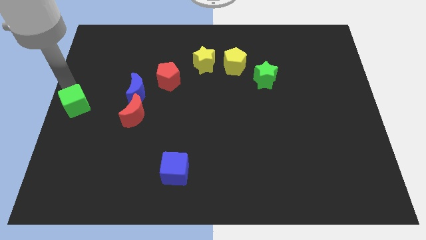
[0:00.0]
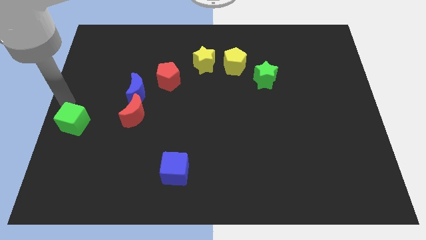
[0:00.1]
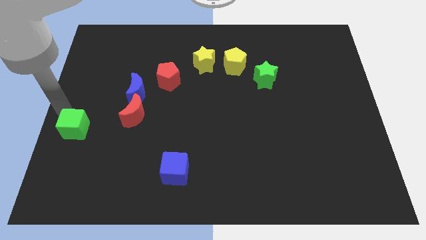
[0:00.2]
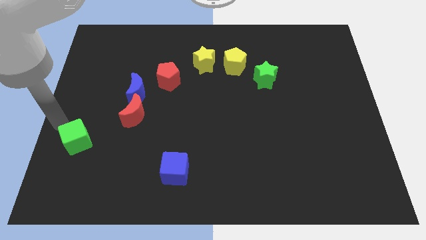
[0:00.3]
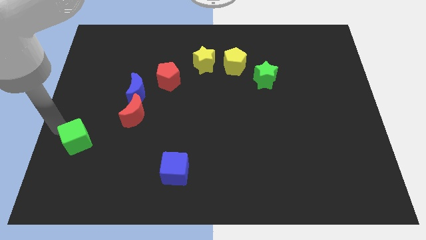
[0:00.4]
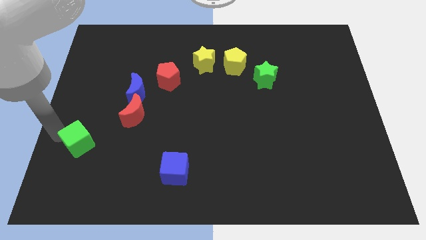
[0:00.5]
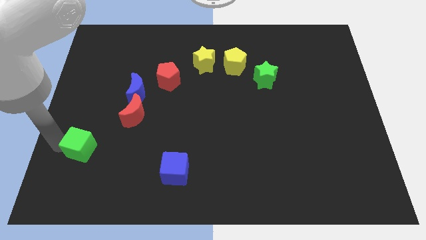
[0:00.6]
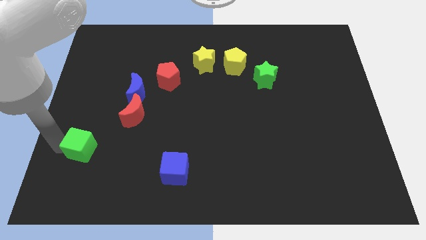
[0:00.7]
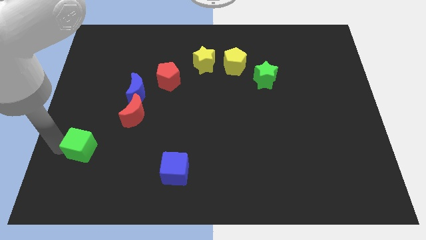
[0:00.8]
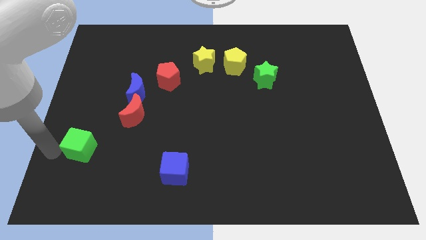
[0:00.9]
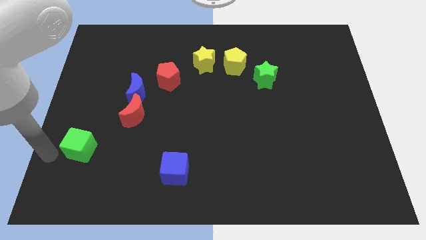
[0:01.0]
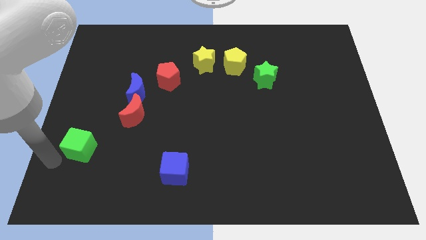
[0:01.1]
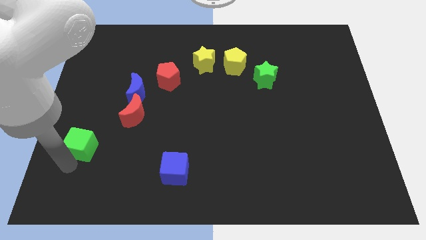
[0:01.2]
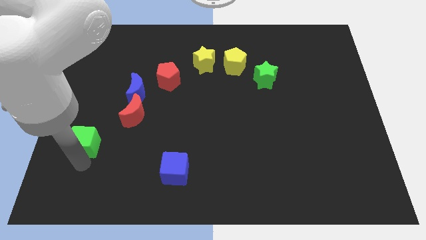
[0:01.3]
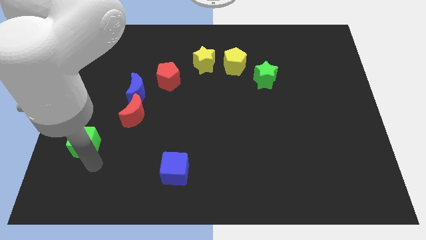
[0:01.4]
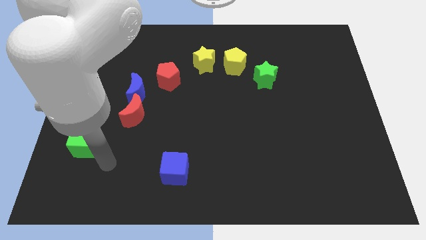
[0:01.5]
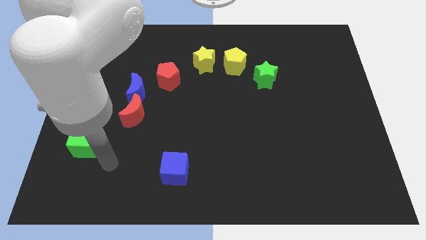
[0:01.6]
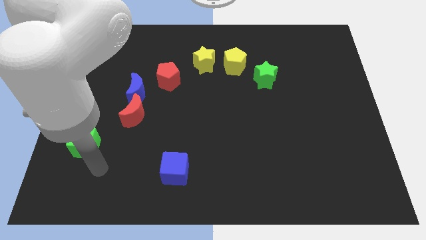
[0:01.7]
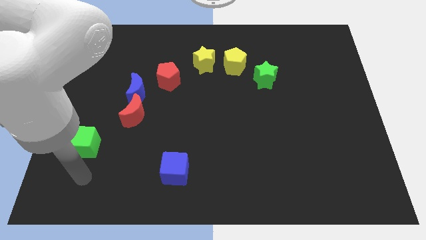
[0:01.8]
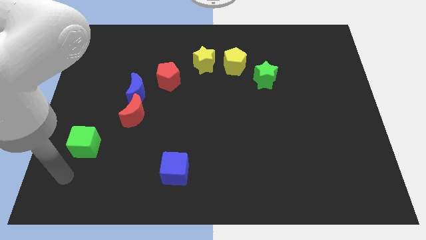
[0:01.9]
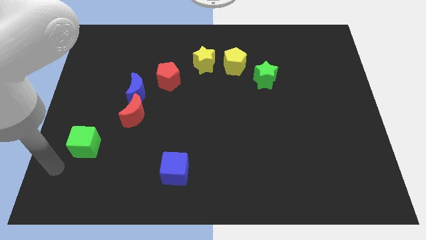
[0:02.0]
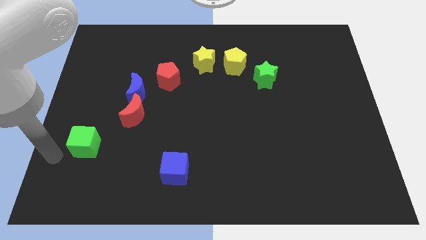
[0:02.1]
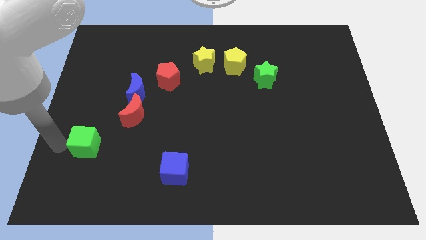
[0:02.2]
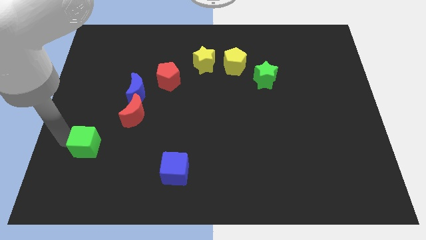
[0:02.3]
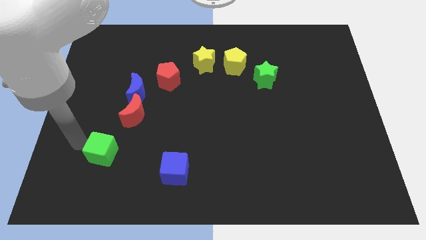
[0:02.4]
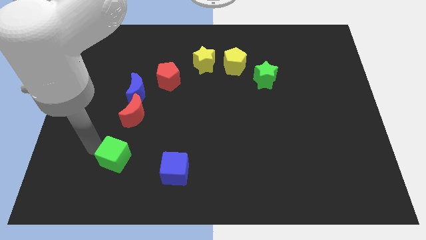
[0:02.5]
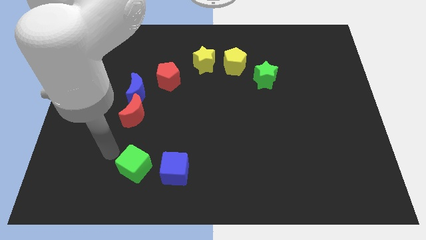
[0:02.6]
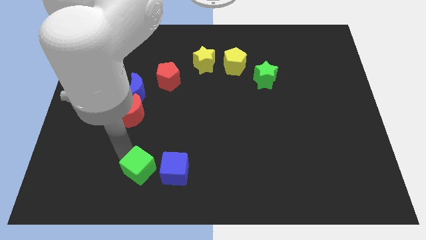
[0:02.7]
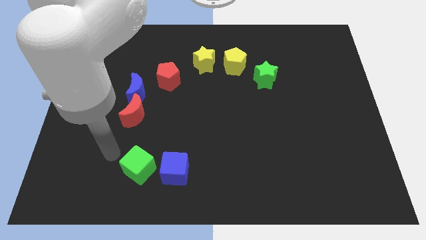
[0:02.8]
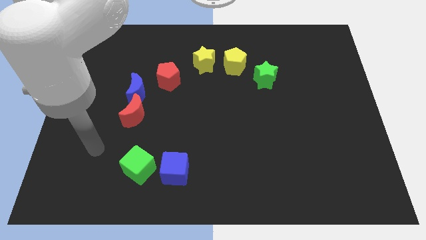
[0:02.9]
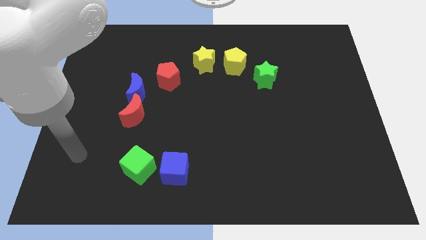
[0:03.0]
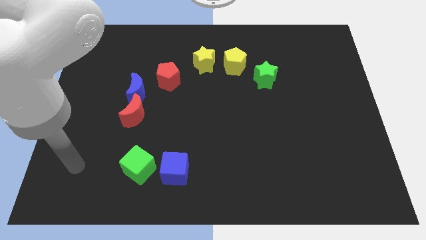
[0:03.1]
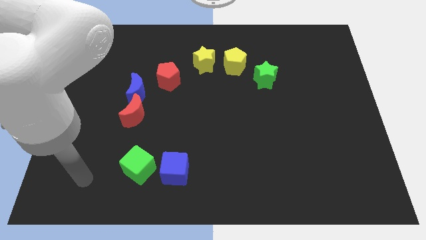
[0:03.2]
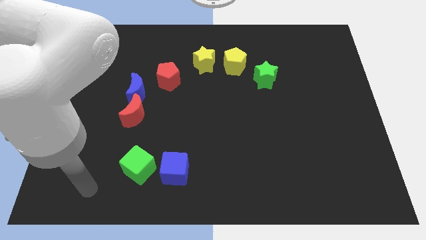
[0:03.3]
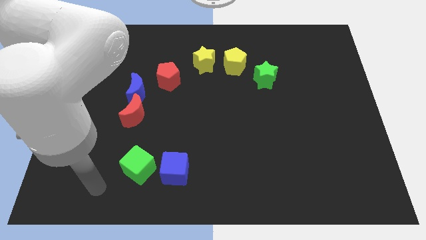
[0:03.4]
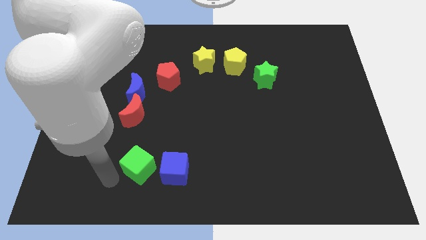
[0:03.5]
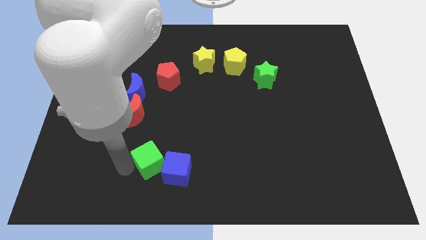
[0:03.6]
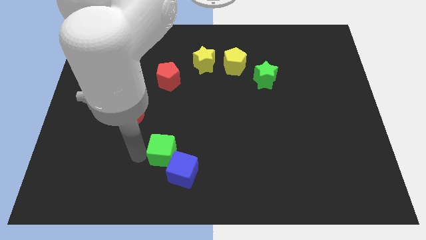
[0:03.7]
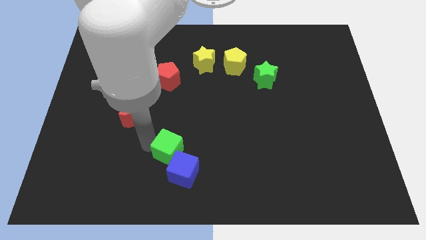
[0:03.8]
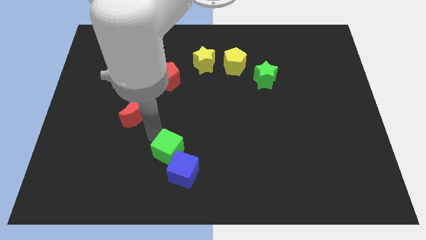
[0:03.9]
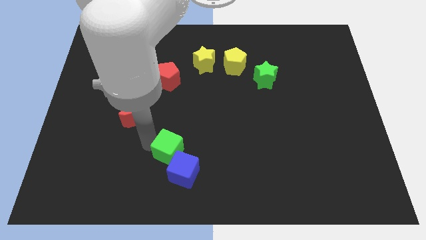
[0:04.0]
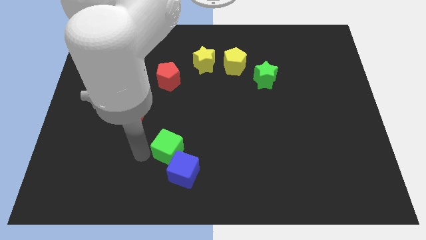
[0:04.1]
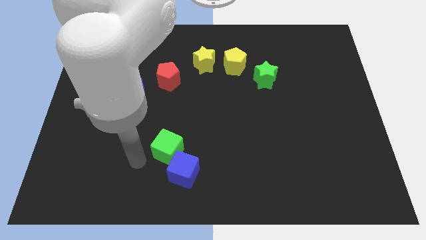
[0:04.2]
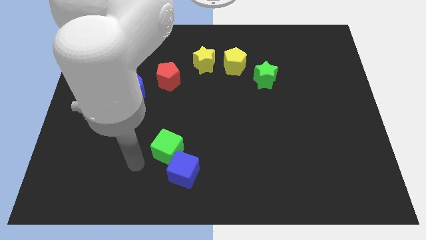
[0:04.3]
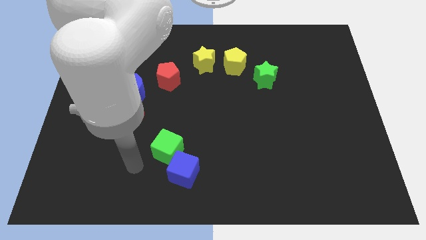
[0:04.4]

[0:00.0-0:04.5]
push green block into the blue block

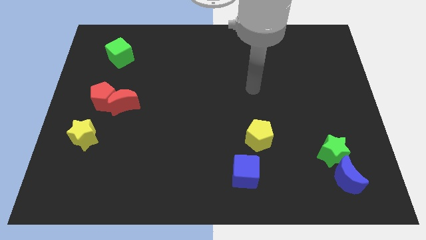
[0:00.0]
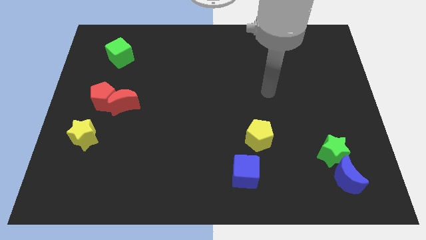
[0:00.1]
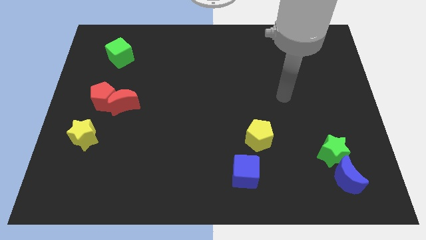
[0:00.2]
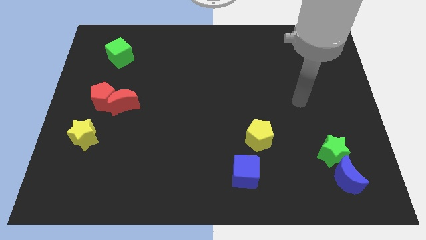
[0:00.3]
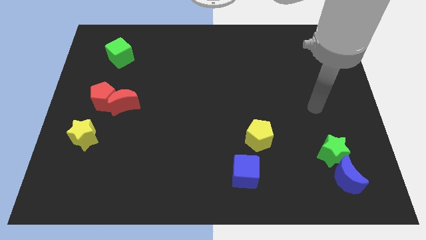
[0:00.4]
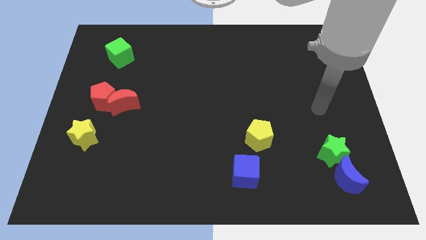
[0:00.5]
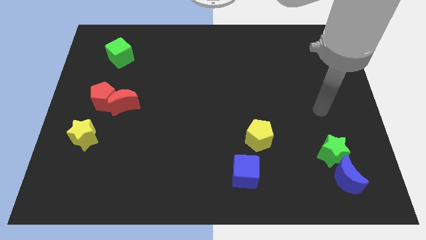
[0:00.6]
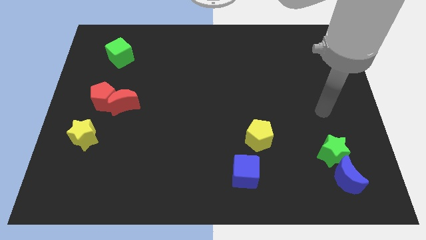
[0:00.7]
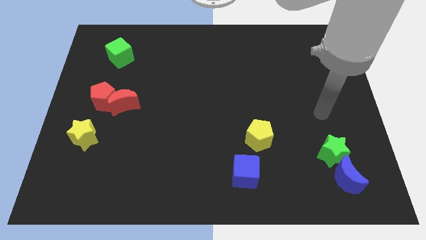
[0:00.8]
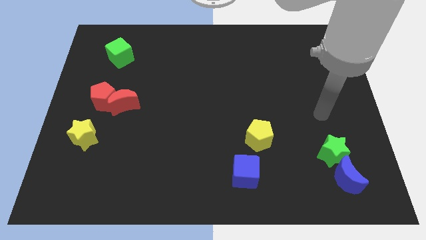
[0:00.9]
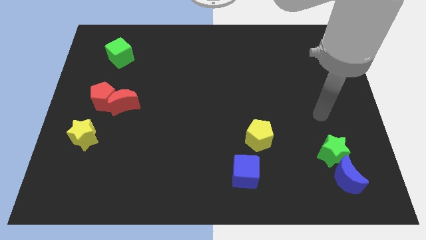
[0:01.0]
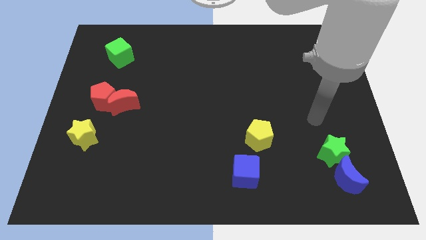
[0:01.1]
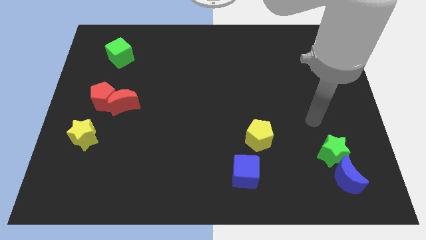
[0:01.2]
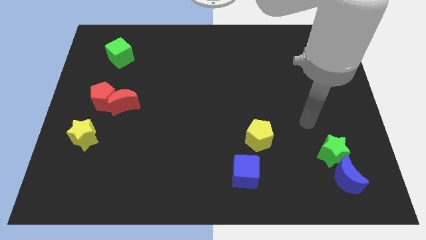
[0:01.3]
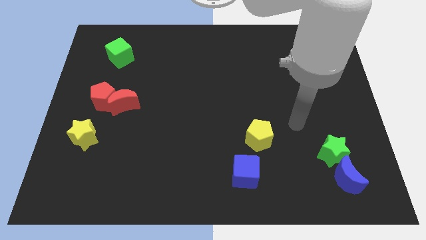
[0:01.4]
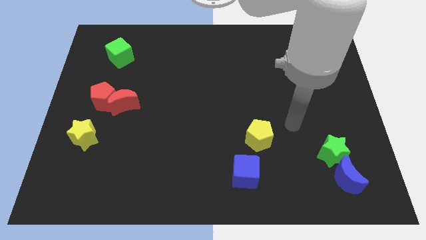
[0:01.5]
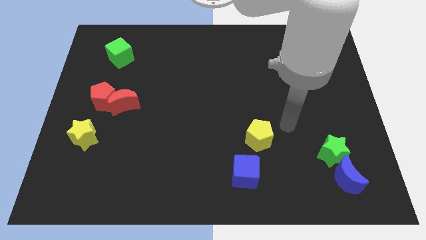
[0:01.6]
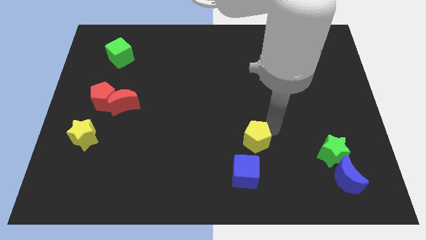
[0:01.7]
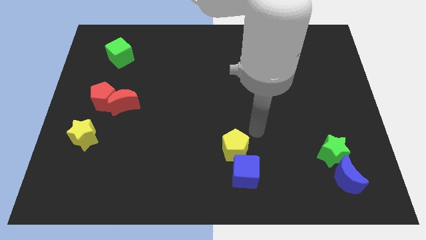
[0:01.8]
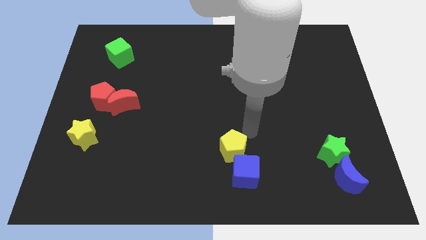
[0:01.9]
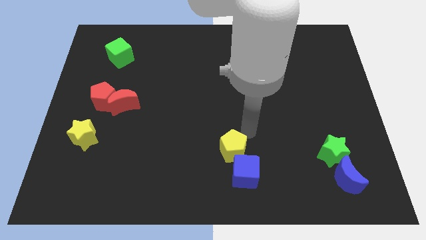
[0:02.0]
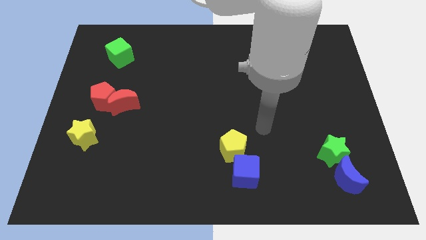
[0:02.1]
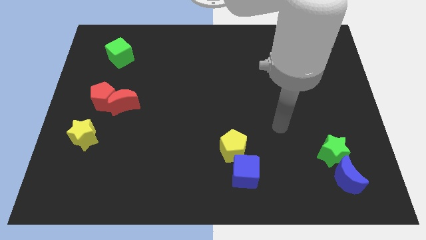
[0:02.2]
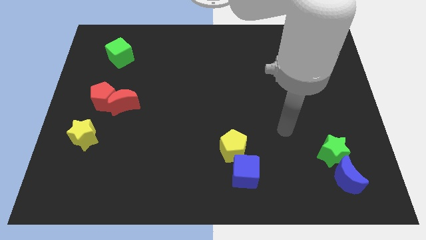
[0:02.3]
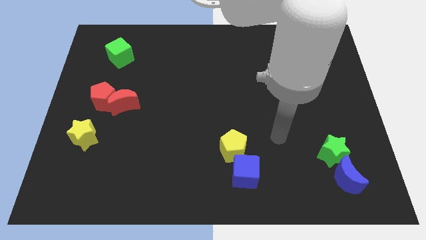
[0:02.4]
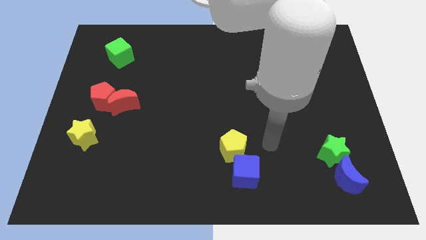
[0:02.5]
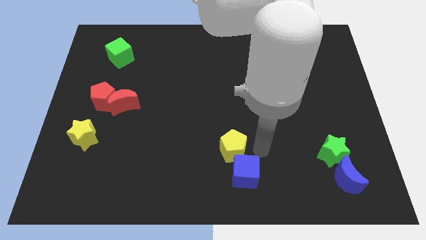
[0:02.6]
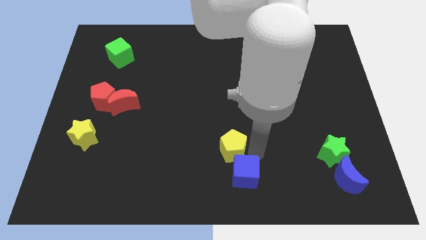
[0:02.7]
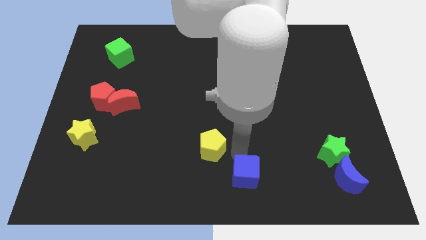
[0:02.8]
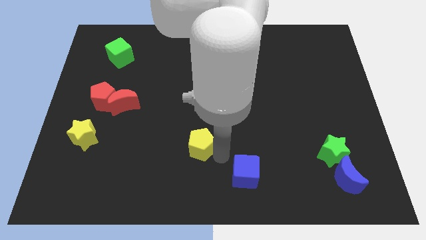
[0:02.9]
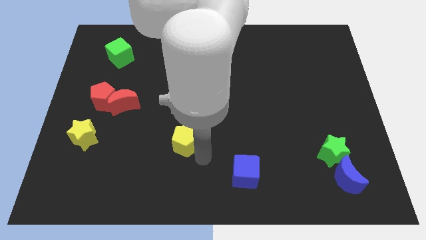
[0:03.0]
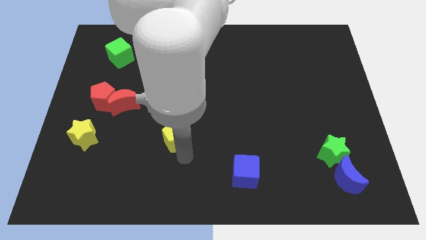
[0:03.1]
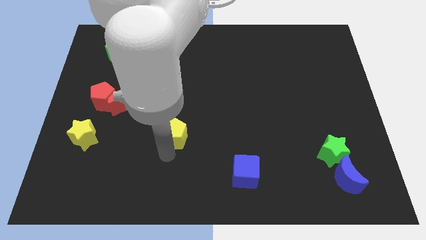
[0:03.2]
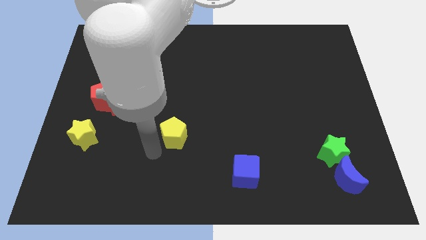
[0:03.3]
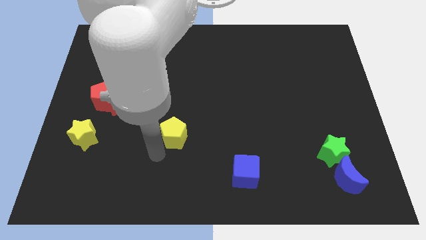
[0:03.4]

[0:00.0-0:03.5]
move the yellow pentagon to the bottom right of red crescent

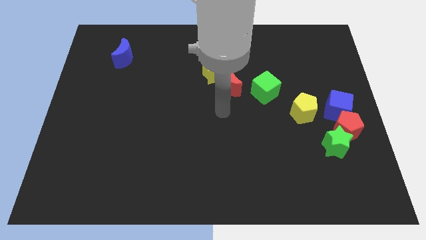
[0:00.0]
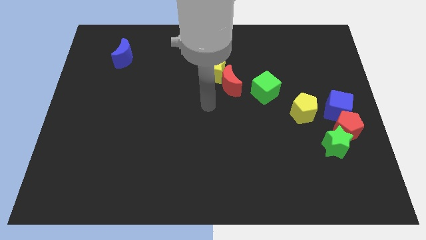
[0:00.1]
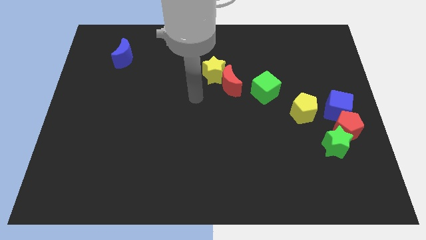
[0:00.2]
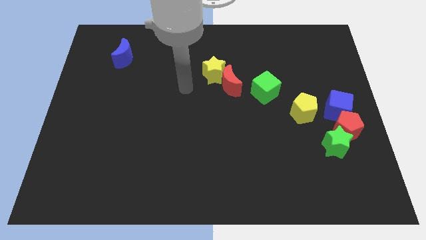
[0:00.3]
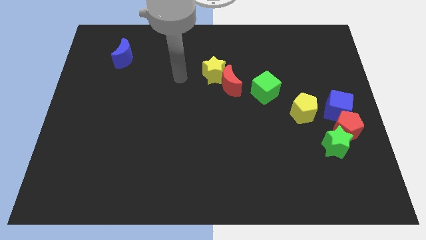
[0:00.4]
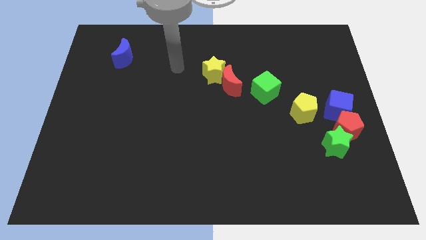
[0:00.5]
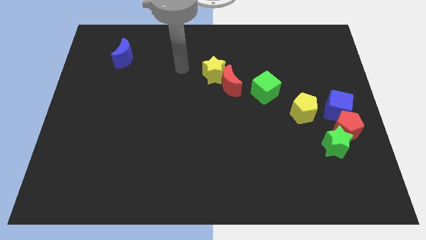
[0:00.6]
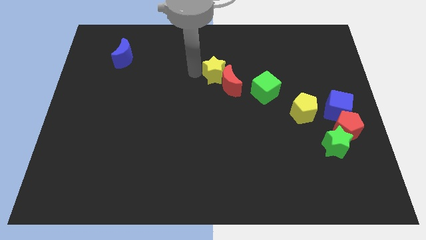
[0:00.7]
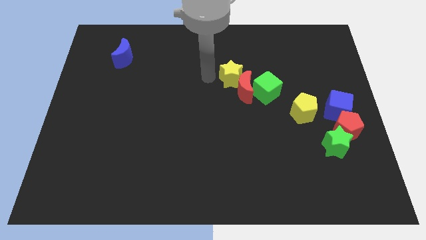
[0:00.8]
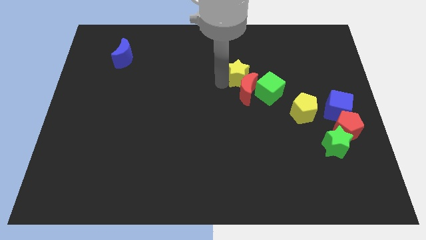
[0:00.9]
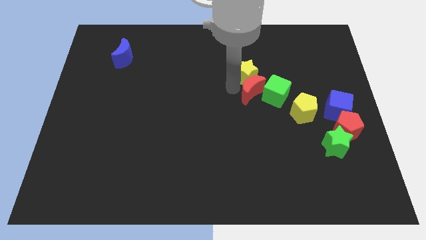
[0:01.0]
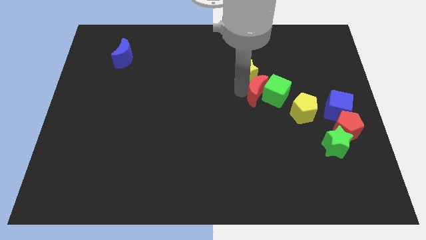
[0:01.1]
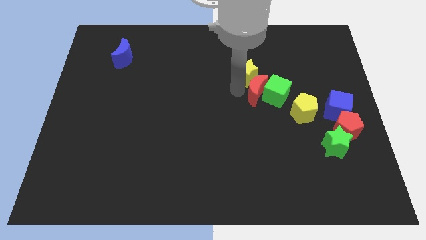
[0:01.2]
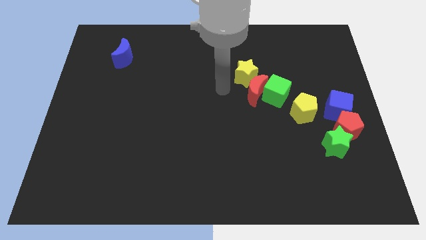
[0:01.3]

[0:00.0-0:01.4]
push the yellow star and red moon into the green cube
